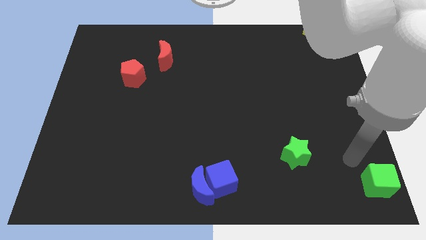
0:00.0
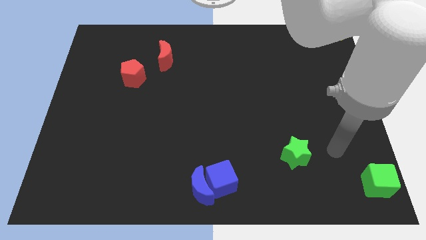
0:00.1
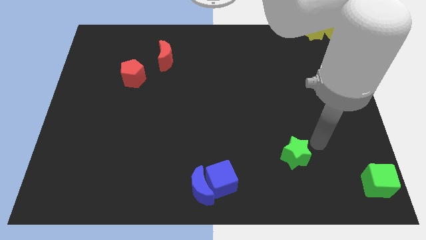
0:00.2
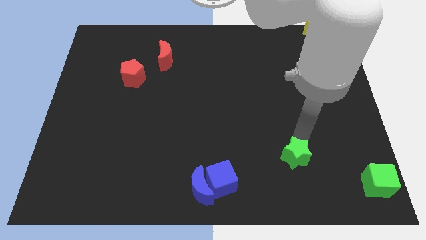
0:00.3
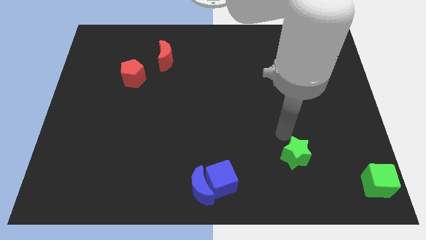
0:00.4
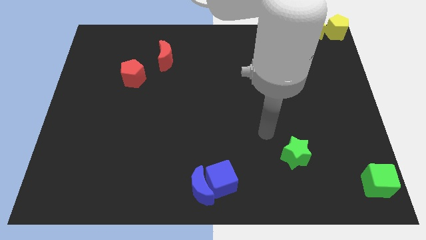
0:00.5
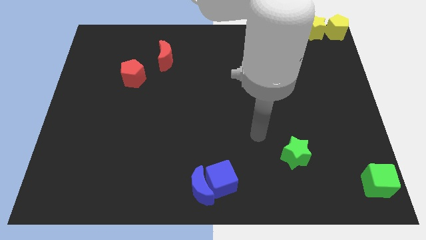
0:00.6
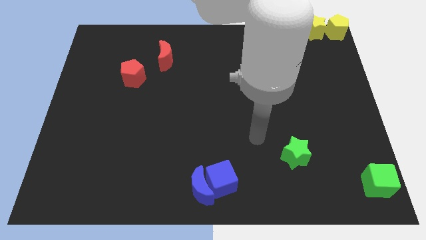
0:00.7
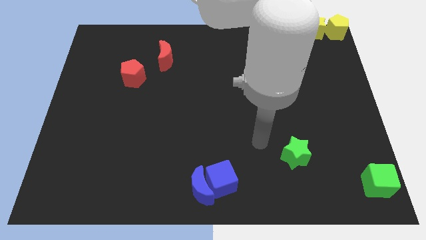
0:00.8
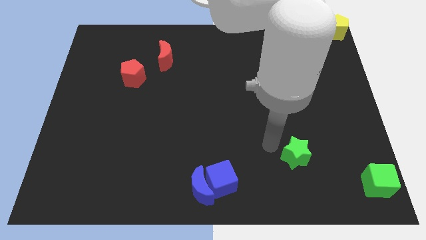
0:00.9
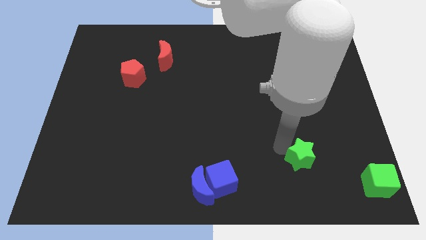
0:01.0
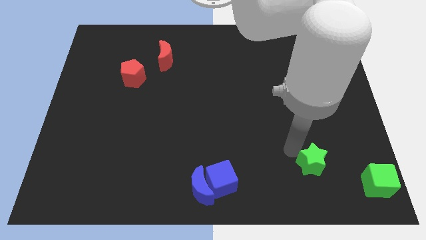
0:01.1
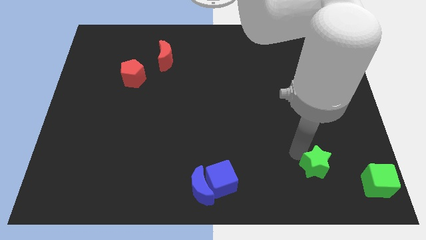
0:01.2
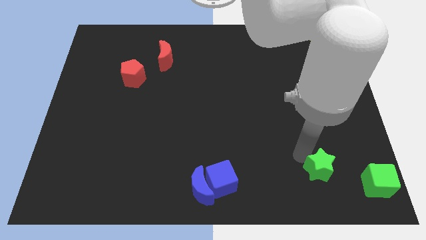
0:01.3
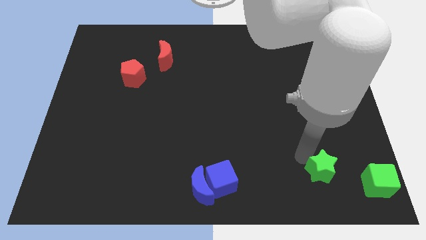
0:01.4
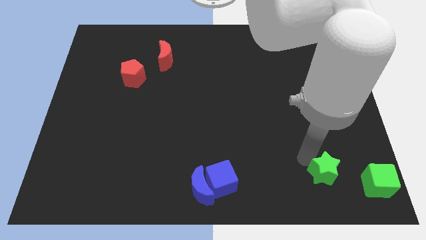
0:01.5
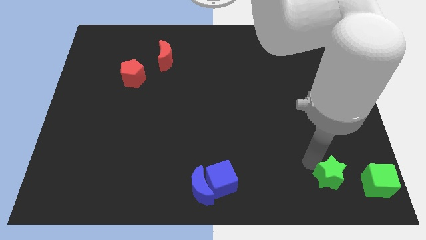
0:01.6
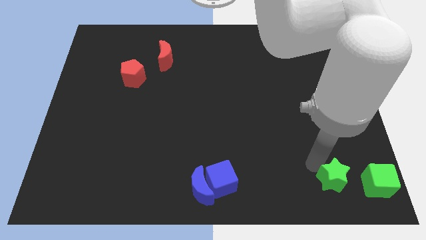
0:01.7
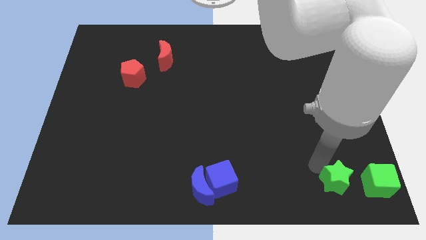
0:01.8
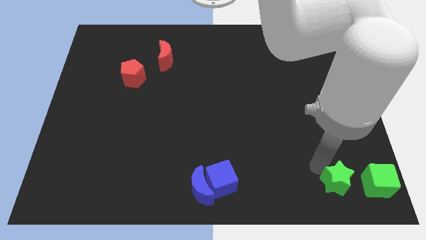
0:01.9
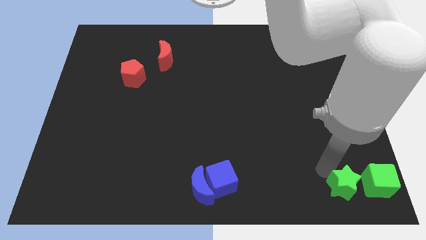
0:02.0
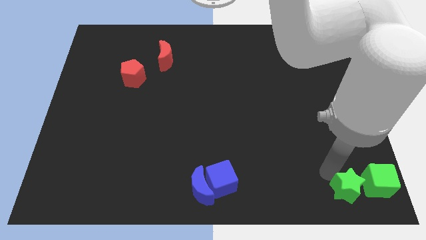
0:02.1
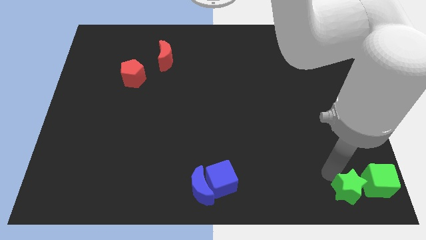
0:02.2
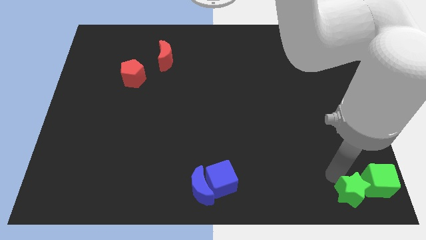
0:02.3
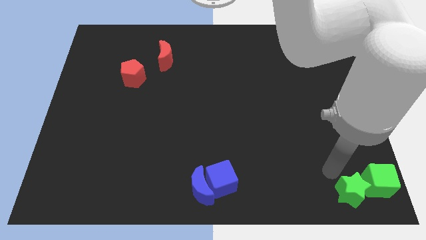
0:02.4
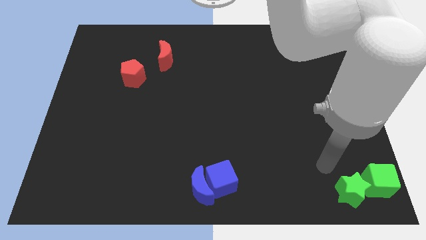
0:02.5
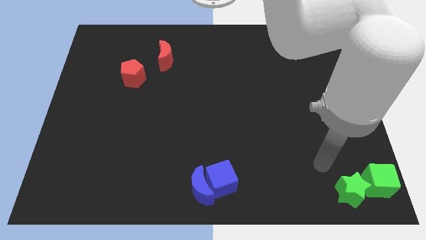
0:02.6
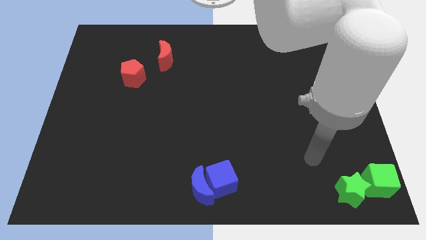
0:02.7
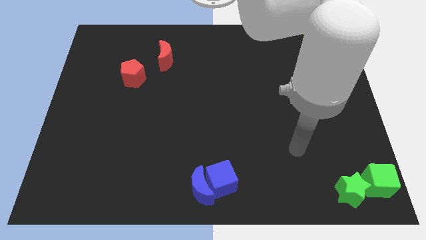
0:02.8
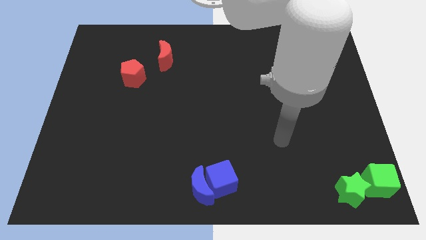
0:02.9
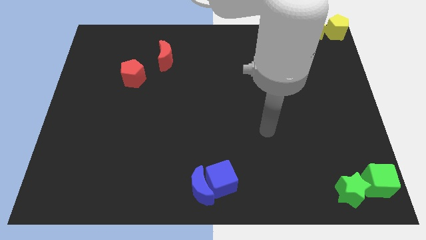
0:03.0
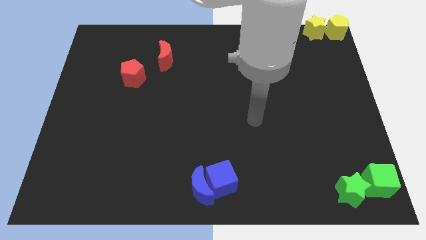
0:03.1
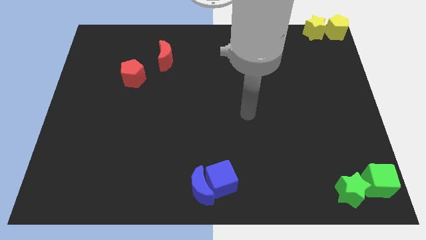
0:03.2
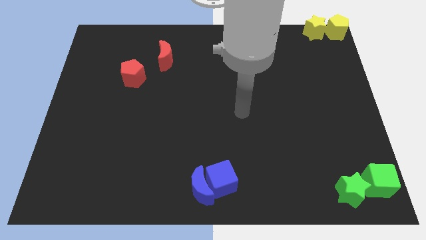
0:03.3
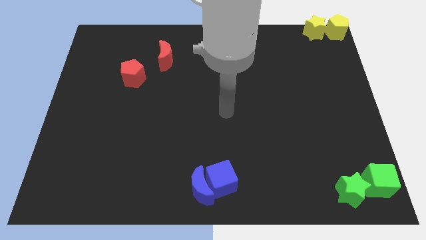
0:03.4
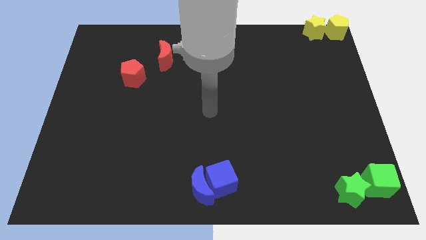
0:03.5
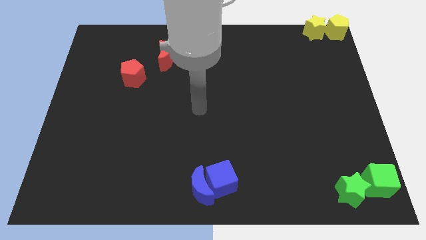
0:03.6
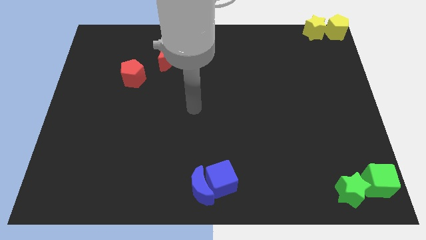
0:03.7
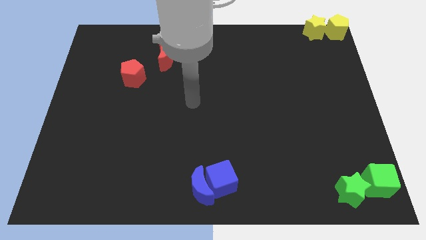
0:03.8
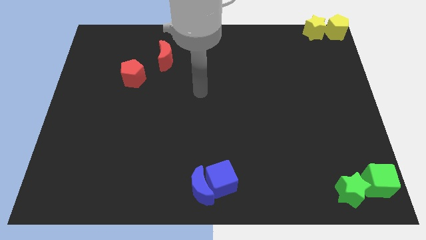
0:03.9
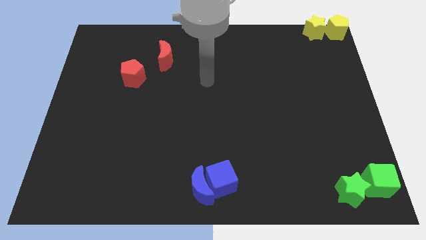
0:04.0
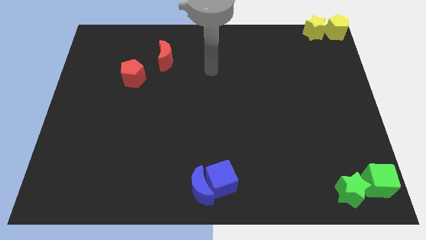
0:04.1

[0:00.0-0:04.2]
place the green star to the left of the green cube

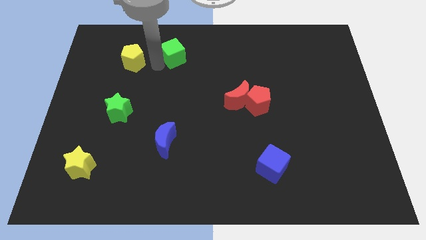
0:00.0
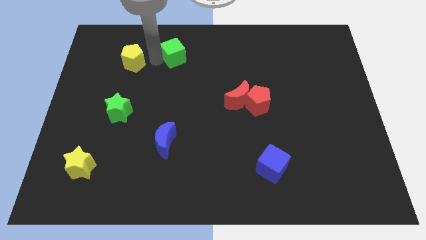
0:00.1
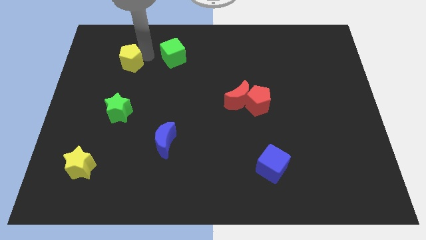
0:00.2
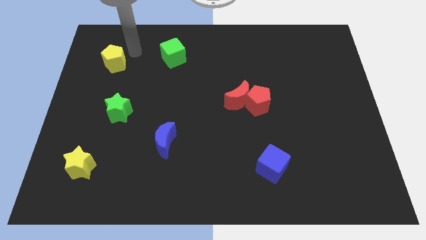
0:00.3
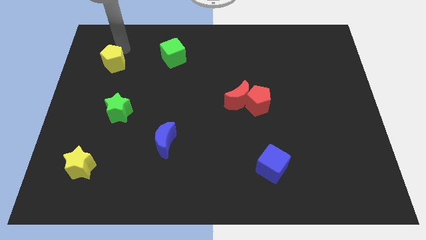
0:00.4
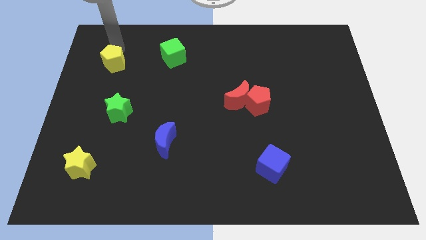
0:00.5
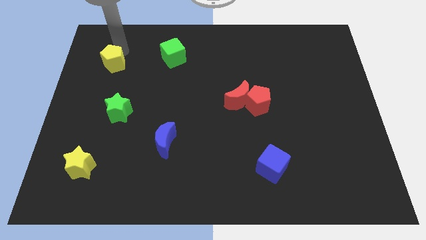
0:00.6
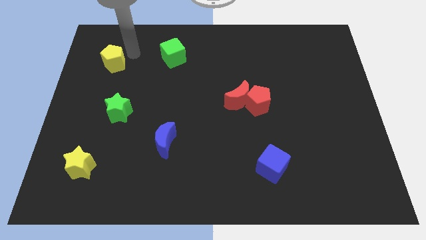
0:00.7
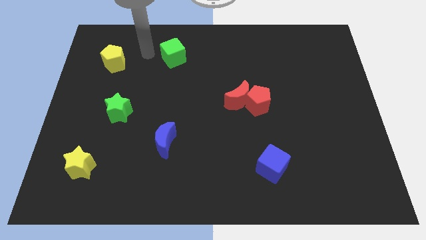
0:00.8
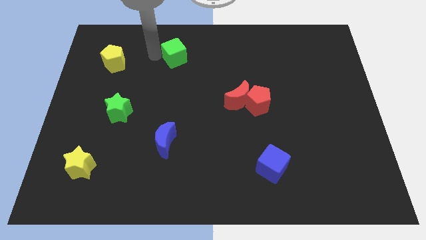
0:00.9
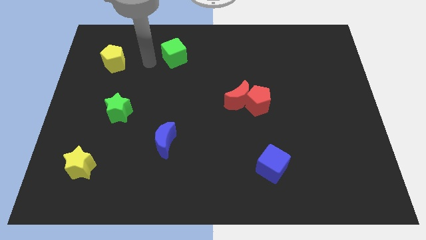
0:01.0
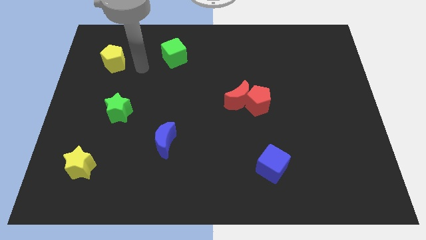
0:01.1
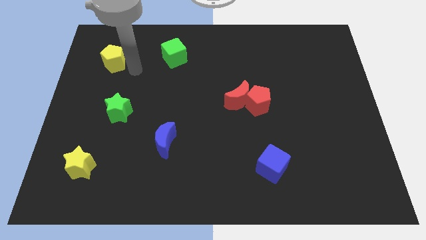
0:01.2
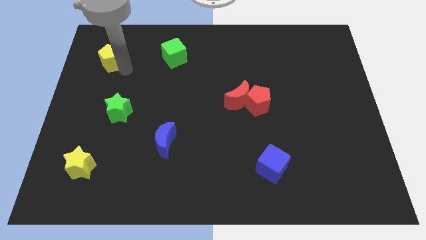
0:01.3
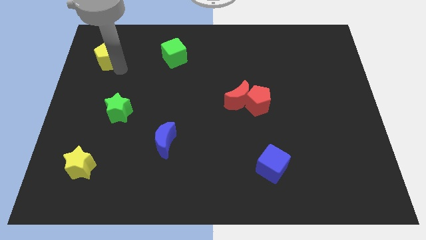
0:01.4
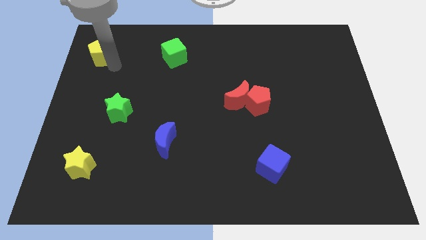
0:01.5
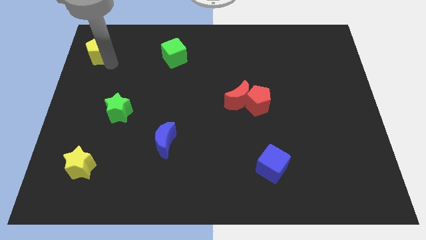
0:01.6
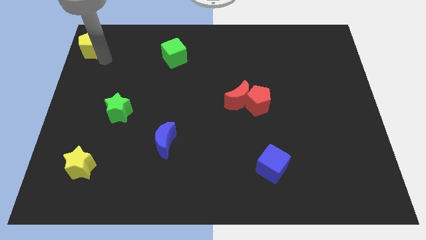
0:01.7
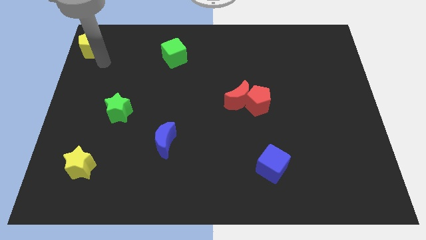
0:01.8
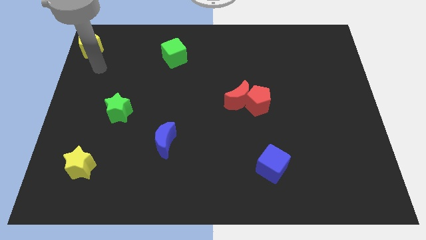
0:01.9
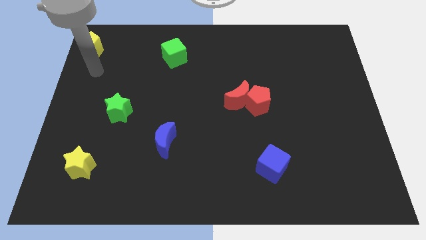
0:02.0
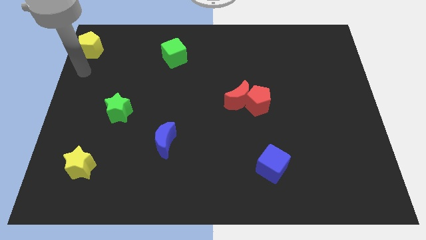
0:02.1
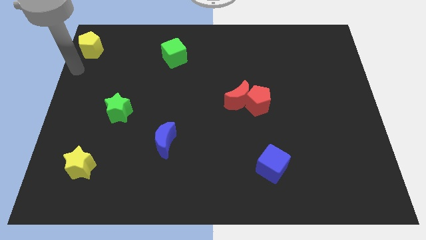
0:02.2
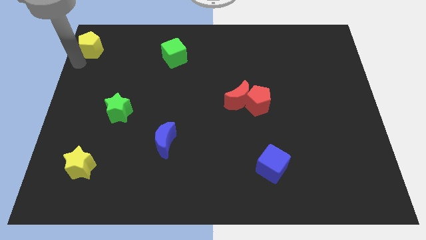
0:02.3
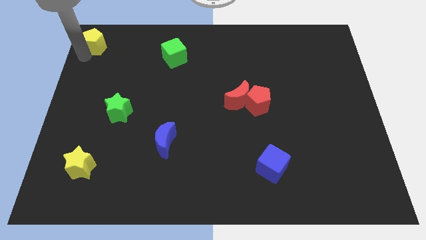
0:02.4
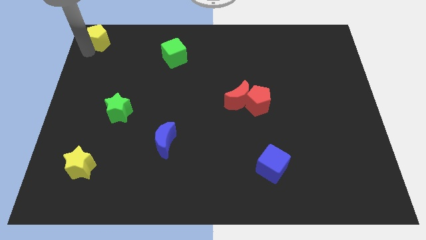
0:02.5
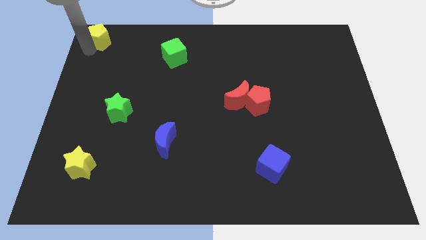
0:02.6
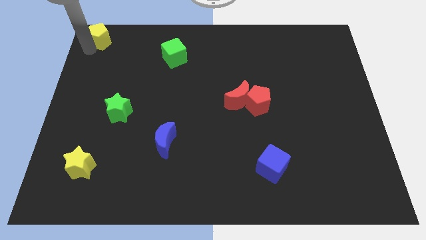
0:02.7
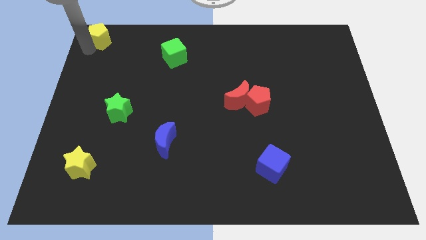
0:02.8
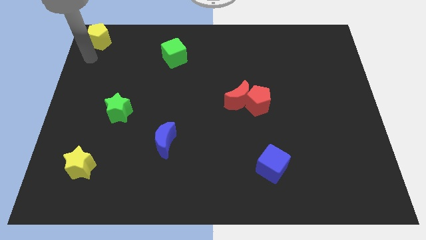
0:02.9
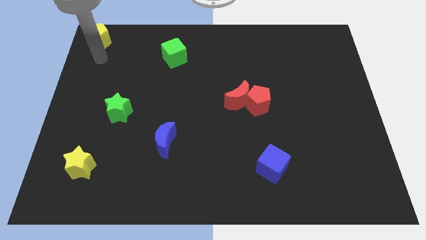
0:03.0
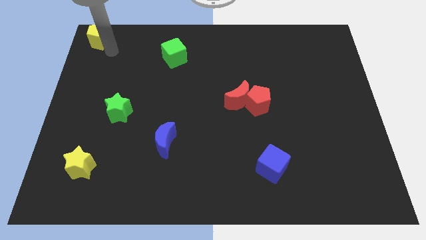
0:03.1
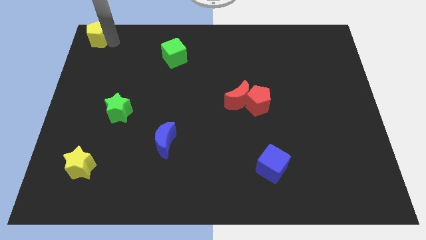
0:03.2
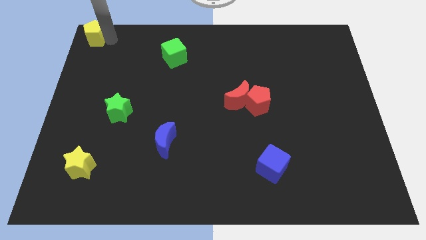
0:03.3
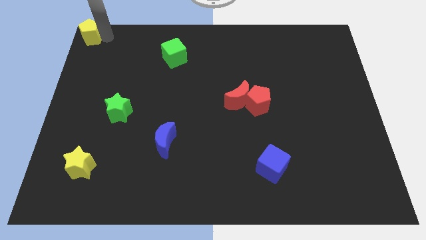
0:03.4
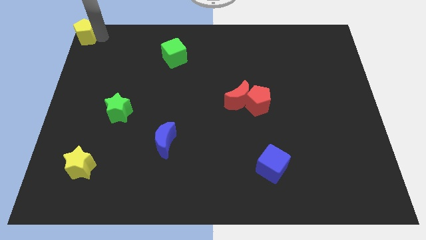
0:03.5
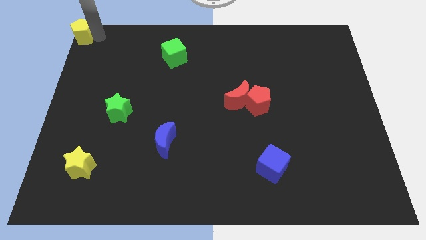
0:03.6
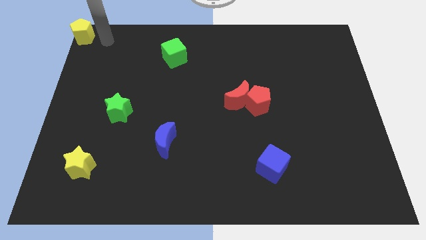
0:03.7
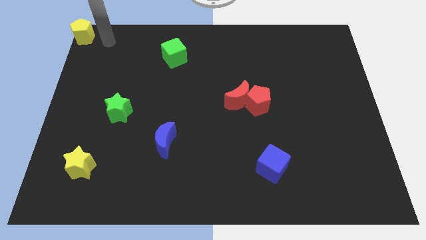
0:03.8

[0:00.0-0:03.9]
place the yellow pentagon towards the top left corner of the board

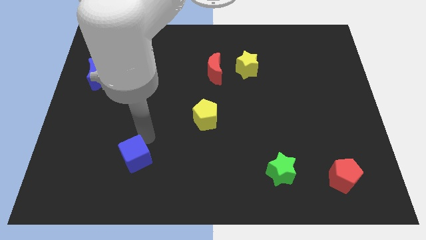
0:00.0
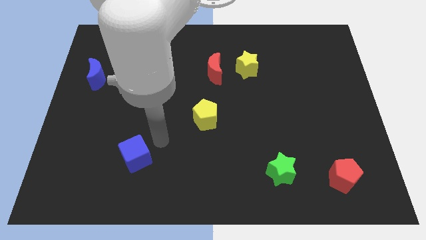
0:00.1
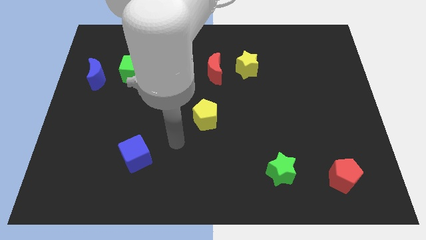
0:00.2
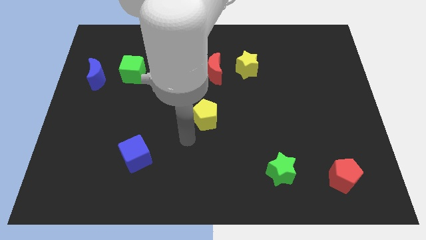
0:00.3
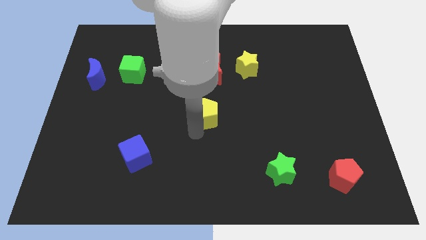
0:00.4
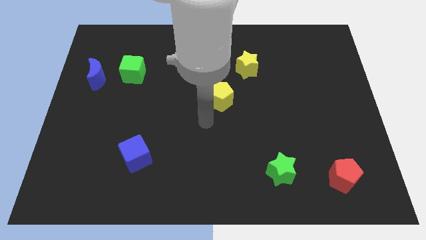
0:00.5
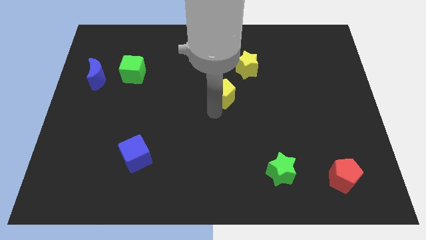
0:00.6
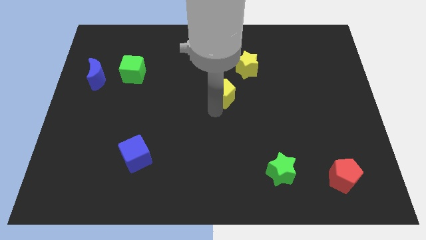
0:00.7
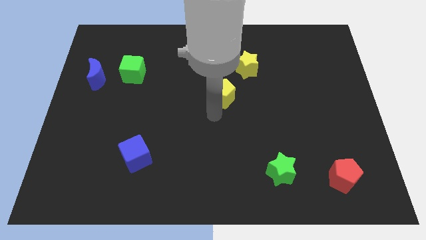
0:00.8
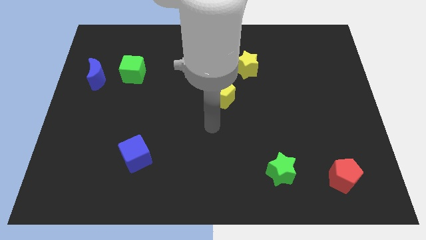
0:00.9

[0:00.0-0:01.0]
push the yellow pentagon slightly to the top
